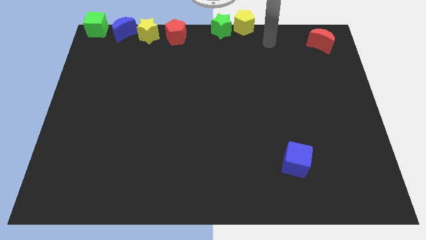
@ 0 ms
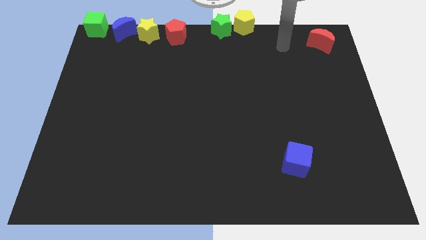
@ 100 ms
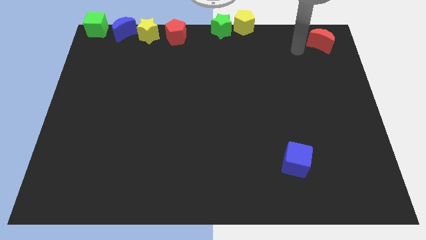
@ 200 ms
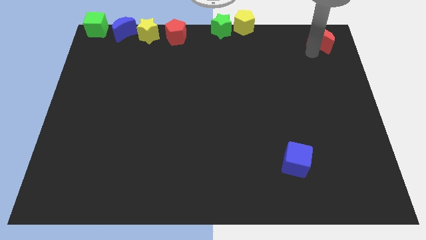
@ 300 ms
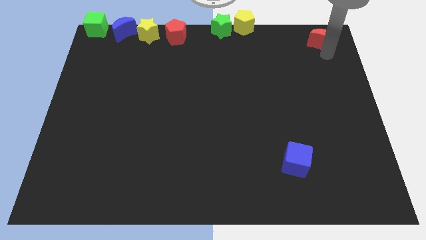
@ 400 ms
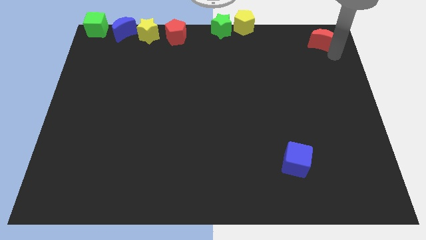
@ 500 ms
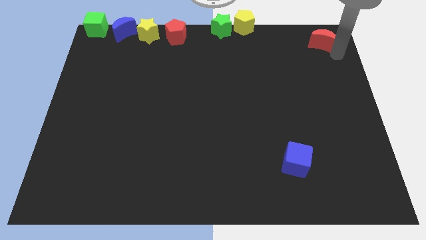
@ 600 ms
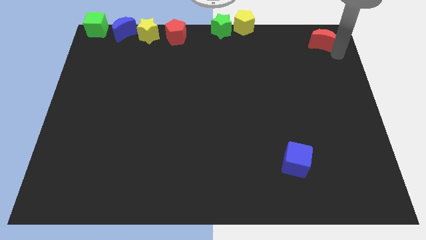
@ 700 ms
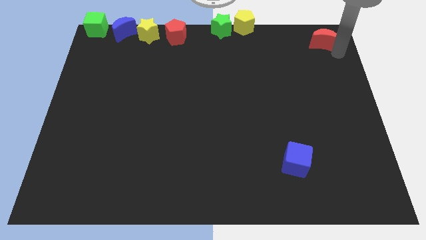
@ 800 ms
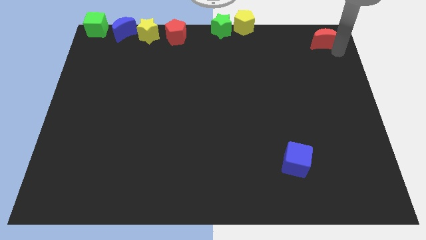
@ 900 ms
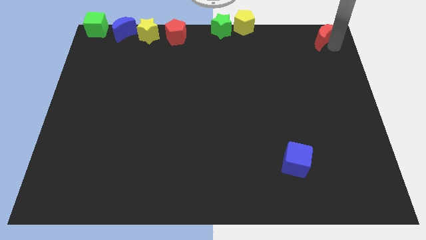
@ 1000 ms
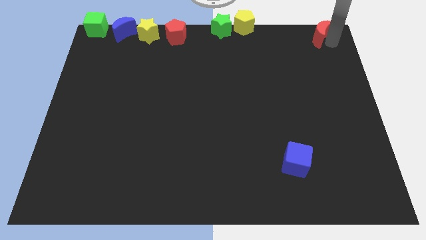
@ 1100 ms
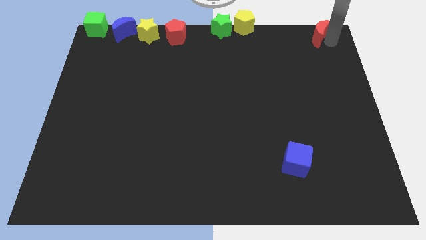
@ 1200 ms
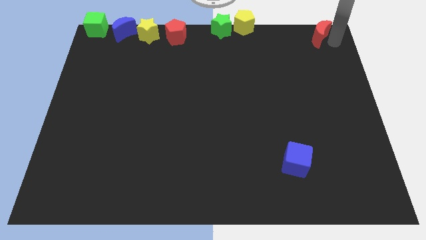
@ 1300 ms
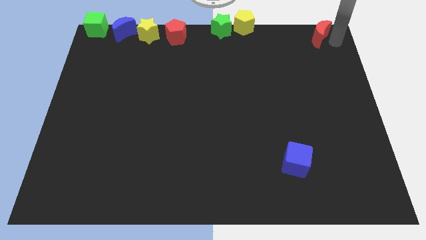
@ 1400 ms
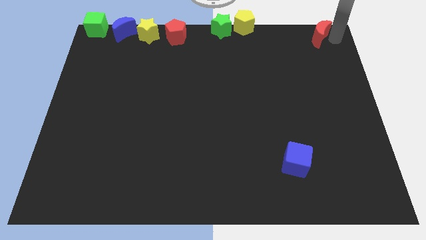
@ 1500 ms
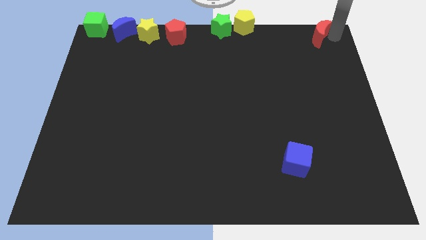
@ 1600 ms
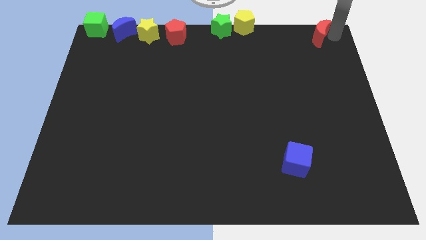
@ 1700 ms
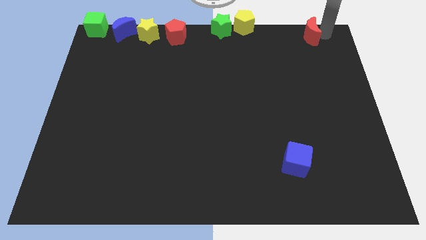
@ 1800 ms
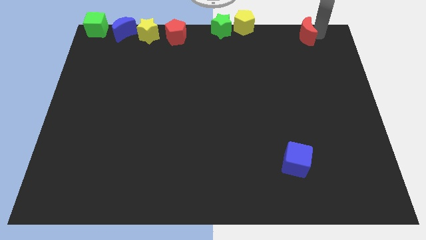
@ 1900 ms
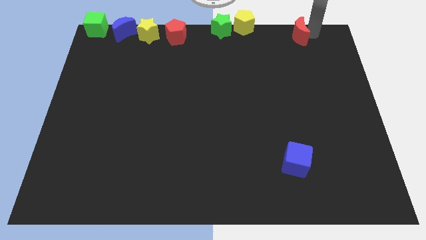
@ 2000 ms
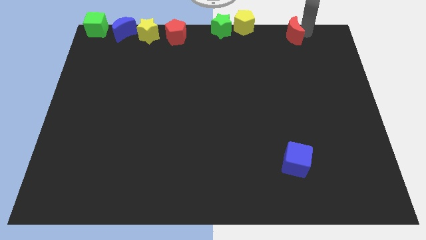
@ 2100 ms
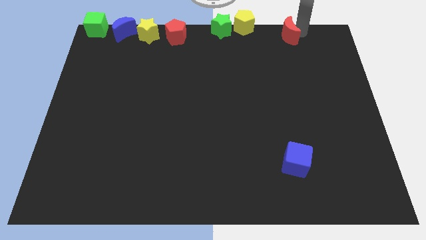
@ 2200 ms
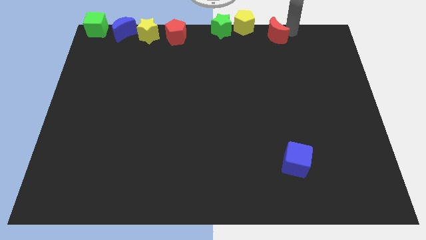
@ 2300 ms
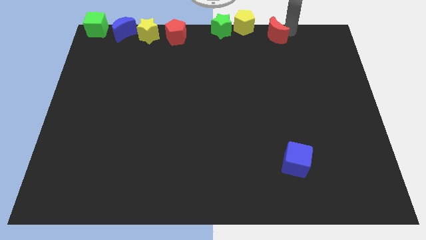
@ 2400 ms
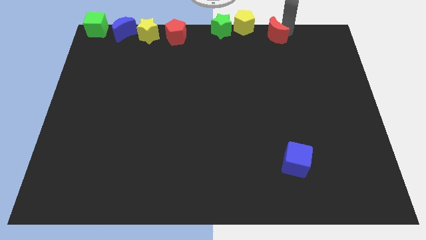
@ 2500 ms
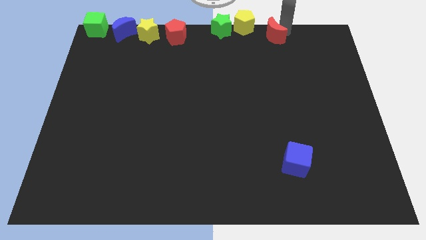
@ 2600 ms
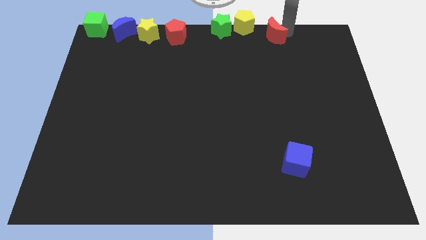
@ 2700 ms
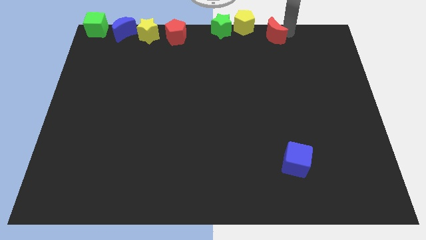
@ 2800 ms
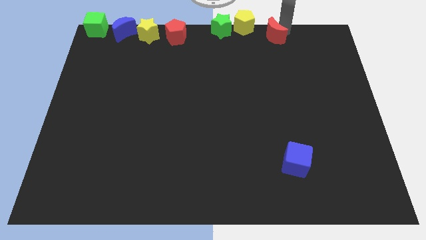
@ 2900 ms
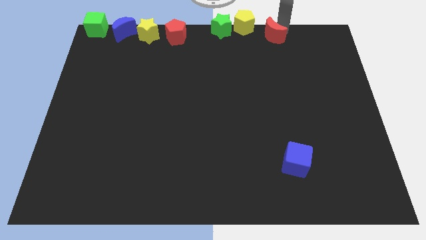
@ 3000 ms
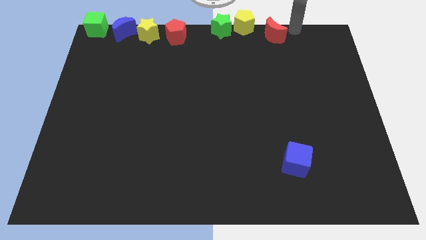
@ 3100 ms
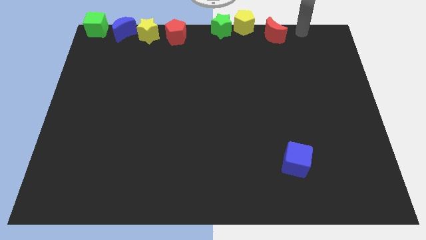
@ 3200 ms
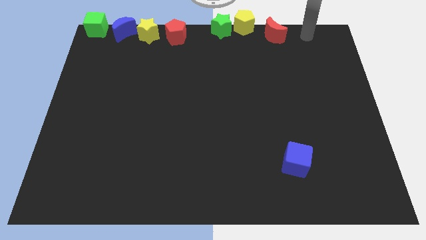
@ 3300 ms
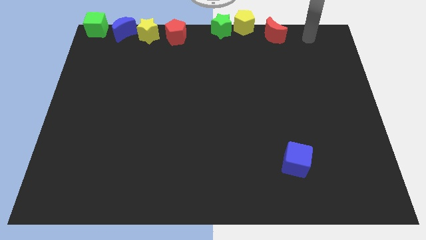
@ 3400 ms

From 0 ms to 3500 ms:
slide the red crescent slightly to the left

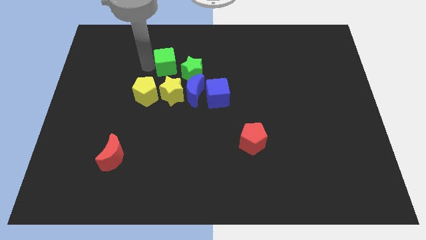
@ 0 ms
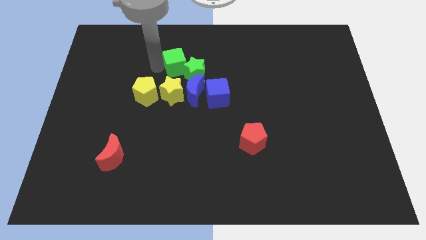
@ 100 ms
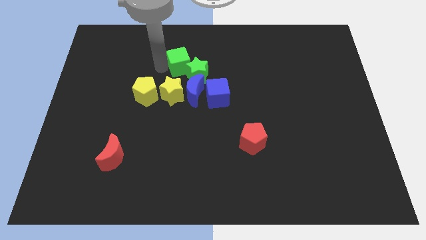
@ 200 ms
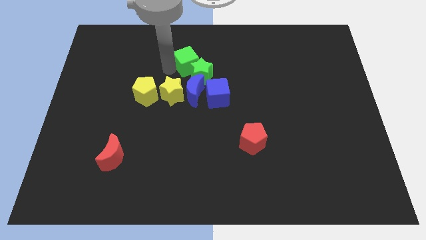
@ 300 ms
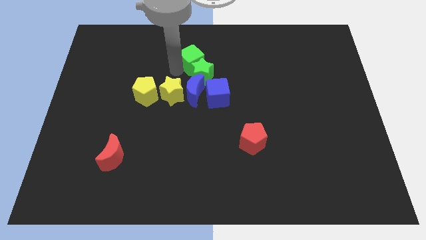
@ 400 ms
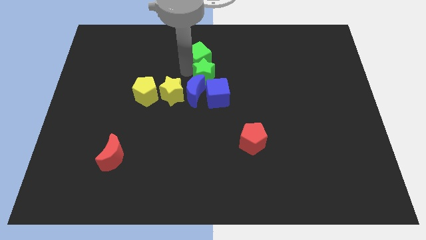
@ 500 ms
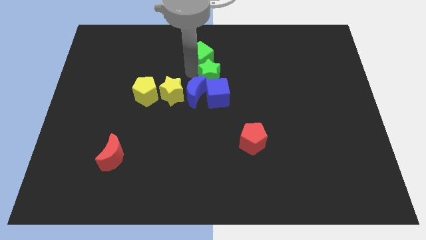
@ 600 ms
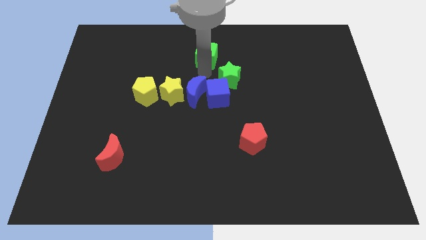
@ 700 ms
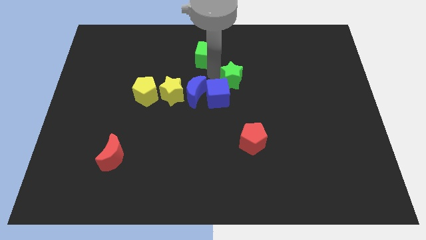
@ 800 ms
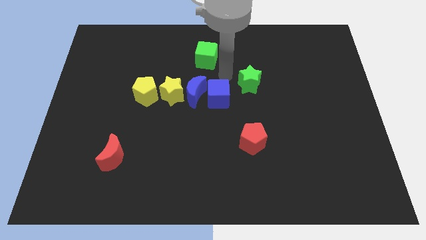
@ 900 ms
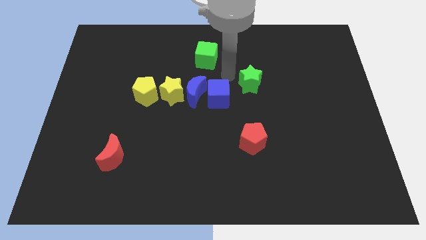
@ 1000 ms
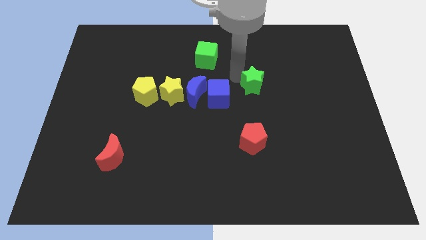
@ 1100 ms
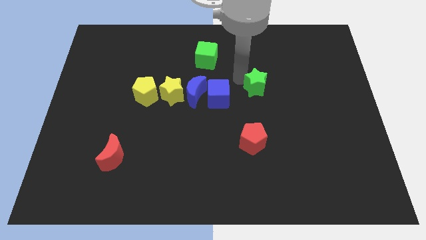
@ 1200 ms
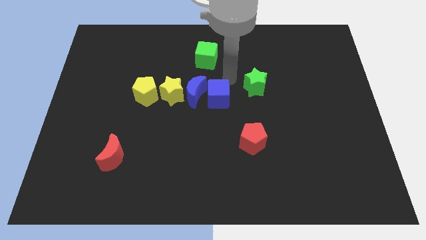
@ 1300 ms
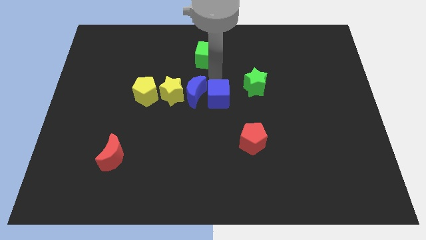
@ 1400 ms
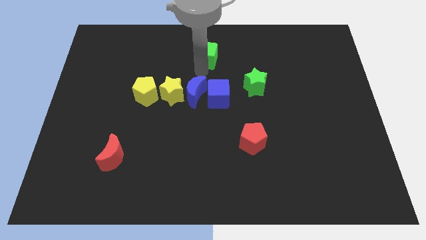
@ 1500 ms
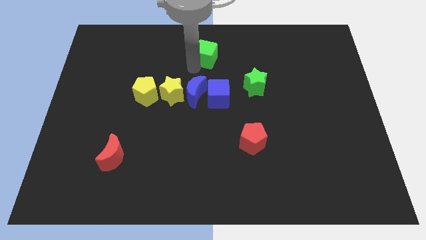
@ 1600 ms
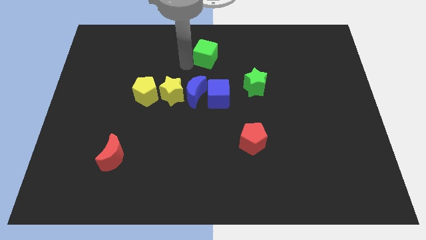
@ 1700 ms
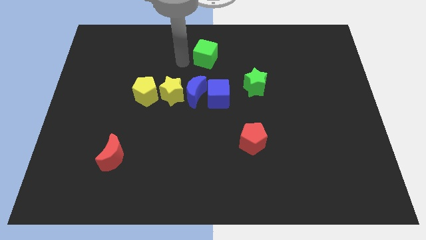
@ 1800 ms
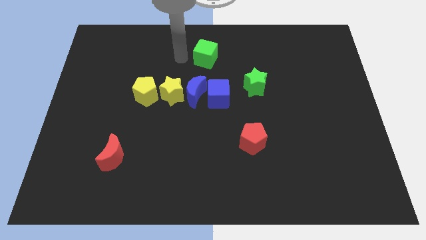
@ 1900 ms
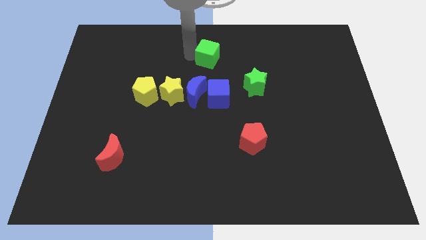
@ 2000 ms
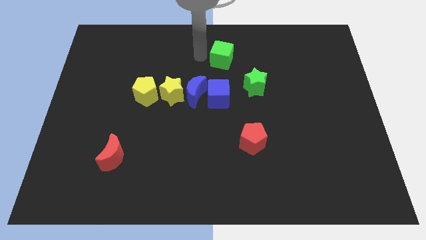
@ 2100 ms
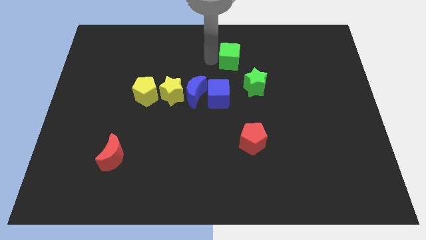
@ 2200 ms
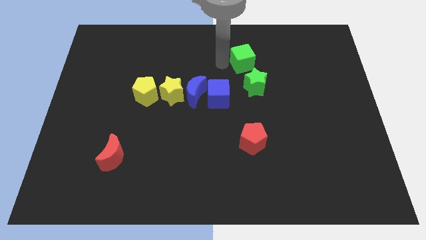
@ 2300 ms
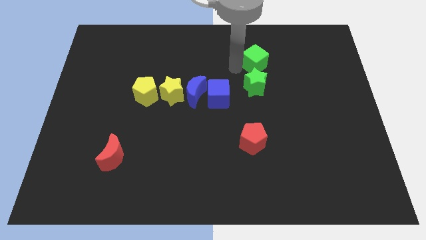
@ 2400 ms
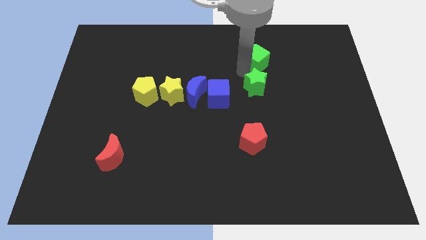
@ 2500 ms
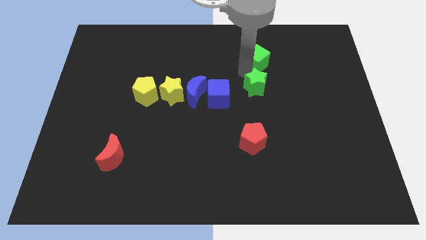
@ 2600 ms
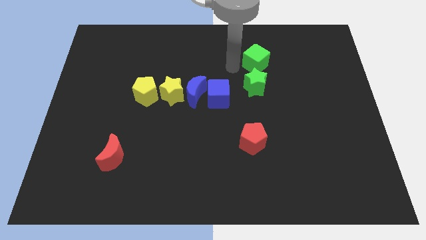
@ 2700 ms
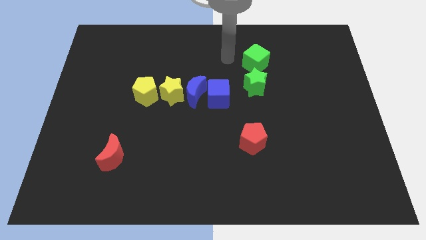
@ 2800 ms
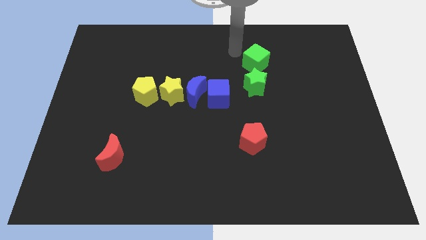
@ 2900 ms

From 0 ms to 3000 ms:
place green cube above green star

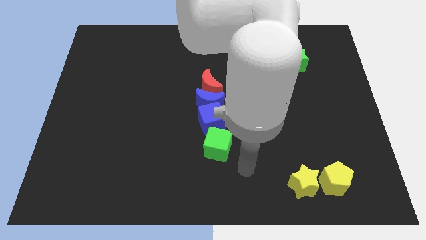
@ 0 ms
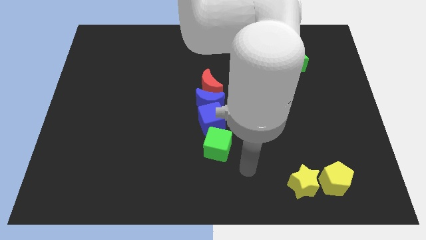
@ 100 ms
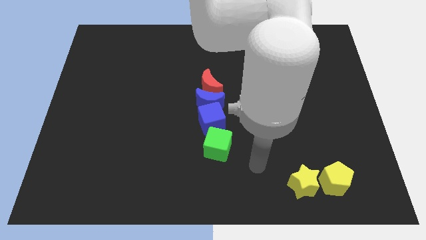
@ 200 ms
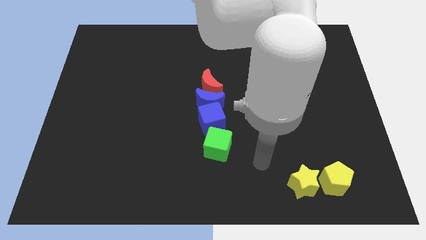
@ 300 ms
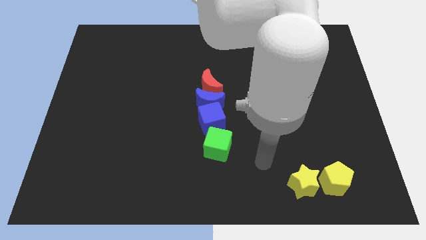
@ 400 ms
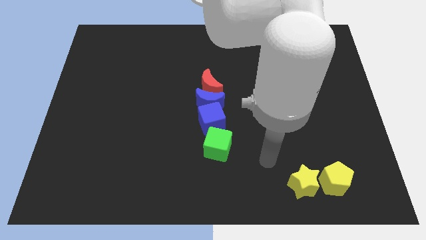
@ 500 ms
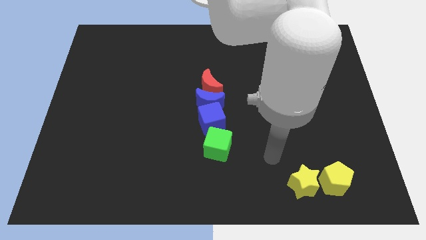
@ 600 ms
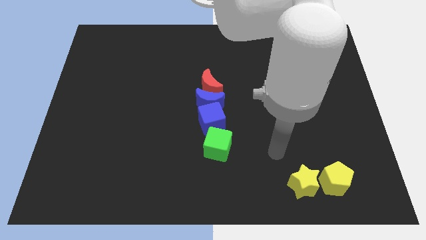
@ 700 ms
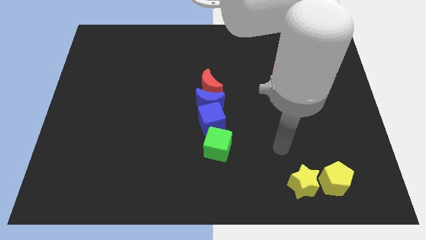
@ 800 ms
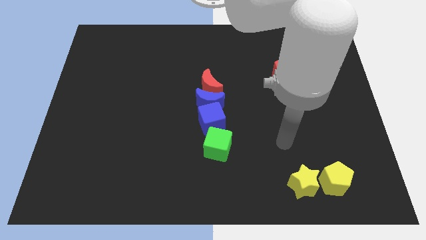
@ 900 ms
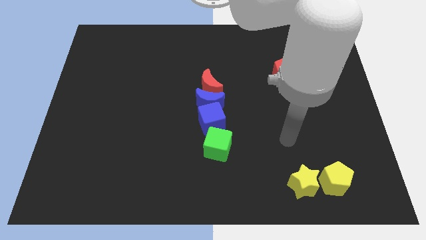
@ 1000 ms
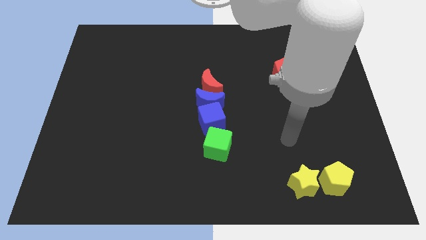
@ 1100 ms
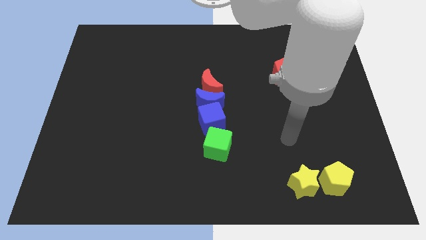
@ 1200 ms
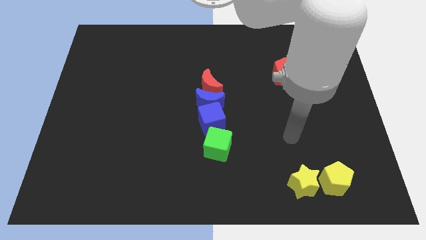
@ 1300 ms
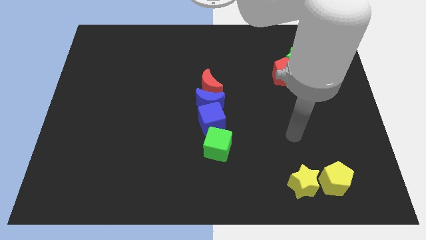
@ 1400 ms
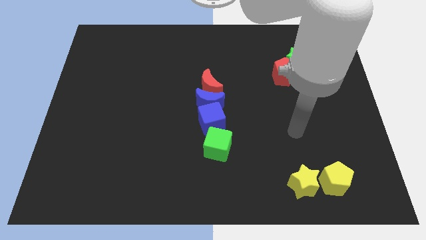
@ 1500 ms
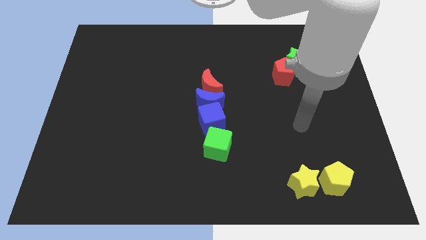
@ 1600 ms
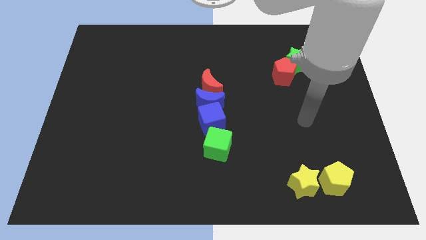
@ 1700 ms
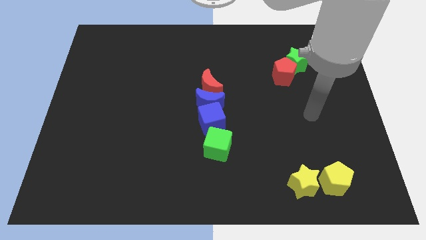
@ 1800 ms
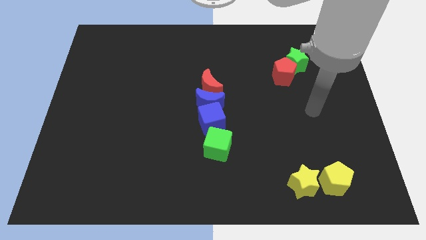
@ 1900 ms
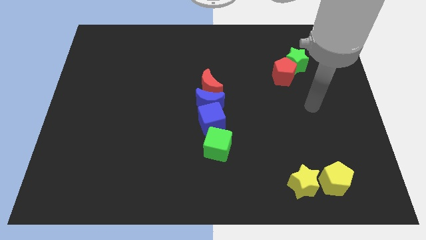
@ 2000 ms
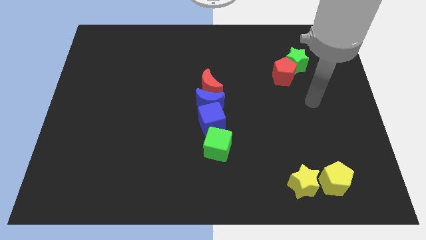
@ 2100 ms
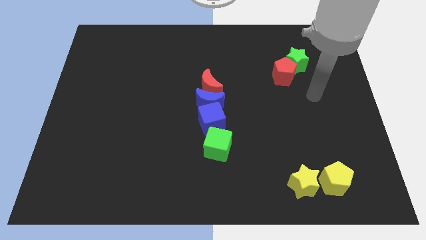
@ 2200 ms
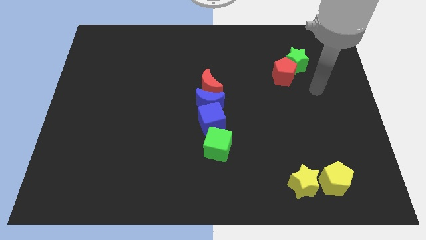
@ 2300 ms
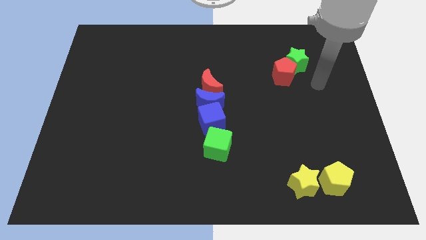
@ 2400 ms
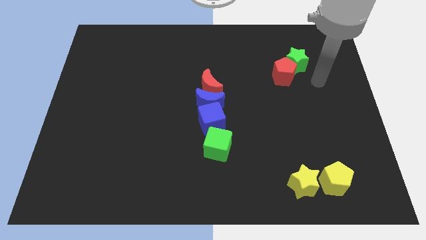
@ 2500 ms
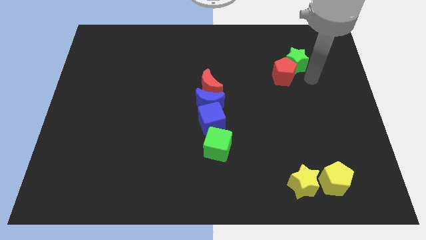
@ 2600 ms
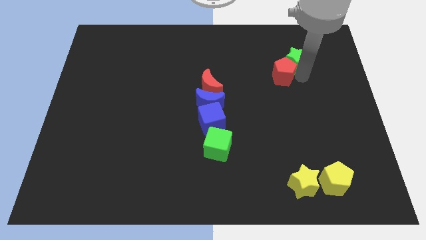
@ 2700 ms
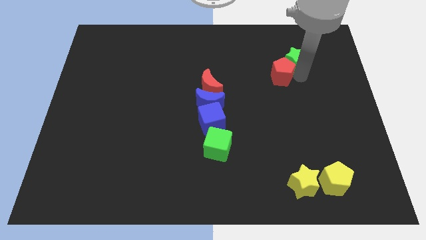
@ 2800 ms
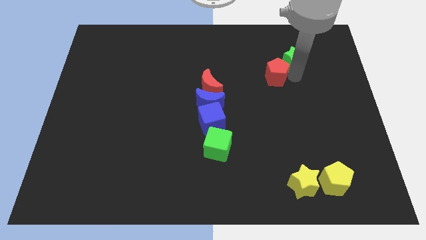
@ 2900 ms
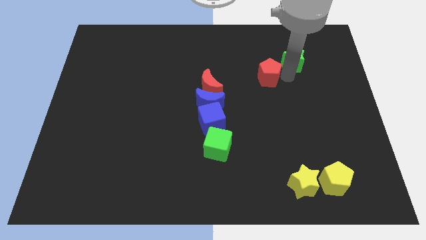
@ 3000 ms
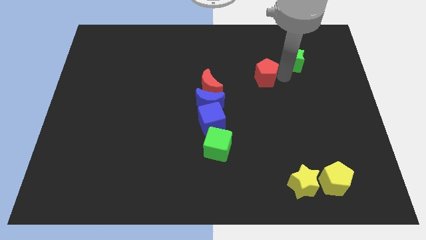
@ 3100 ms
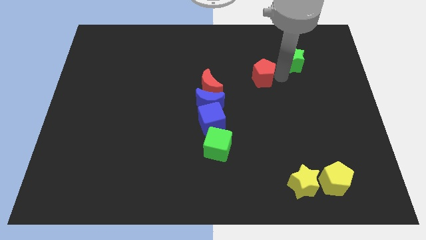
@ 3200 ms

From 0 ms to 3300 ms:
separate the red pentagon and green star
